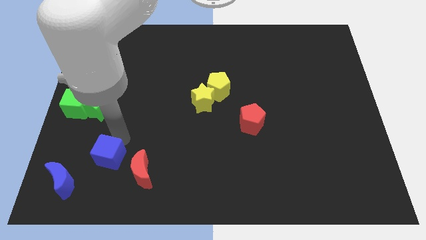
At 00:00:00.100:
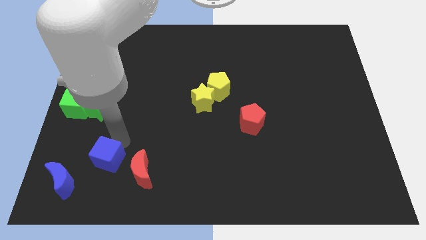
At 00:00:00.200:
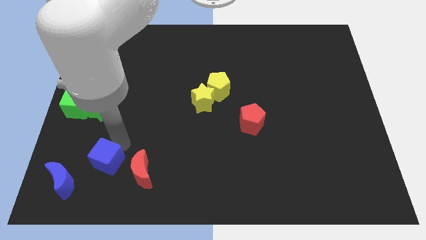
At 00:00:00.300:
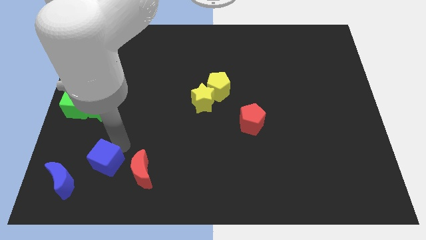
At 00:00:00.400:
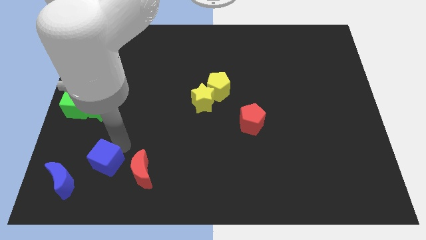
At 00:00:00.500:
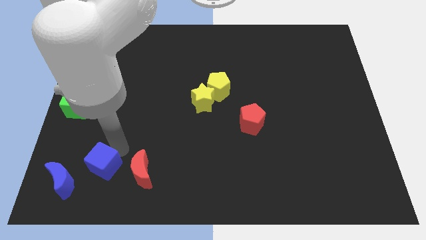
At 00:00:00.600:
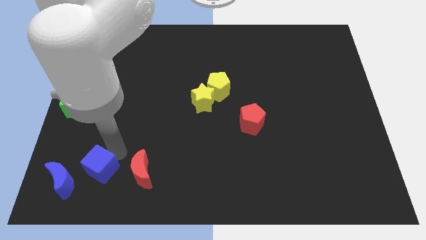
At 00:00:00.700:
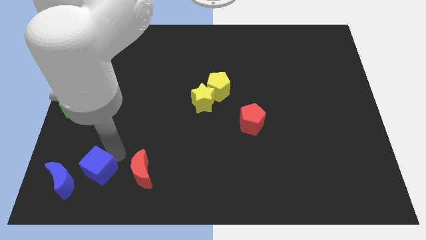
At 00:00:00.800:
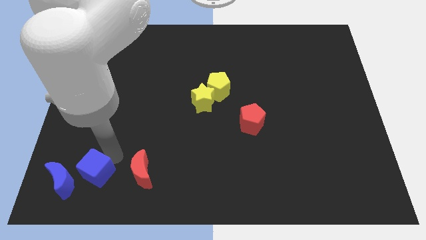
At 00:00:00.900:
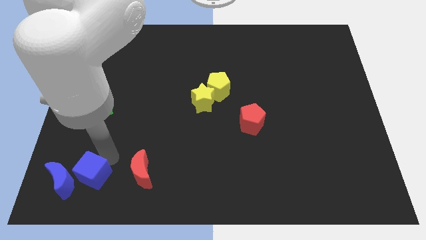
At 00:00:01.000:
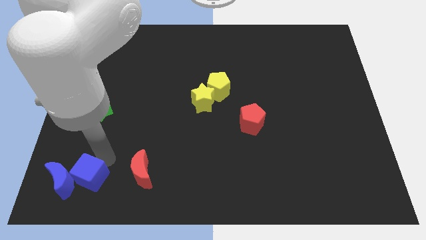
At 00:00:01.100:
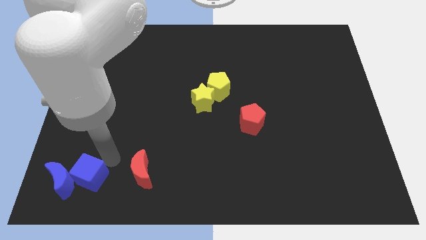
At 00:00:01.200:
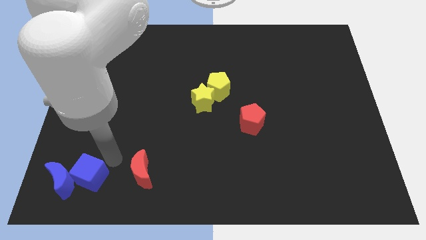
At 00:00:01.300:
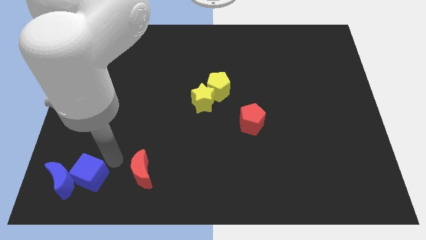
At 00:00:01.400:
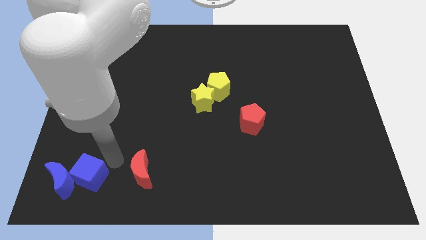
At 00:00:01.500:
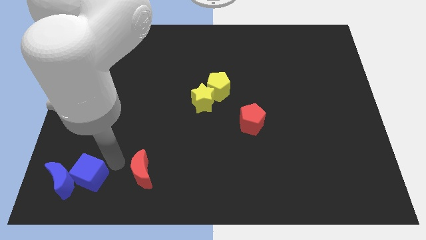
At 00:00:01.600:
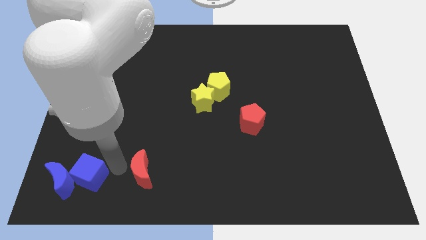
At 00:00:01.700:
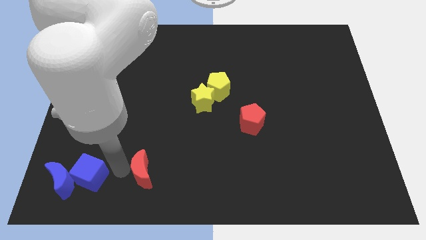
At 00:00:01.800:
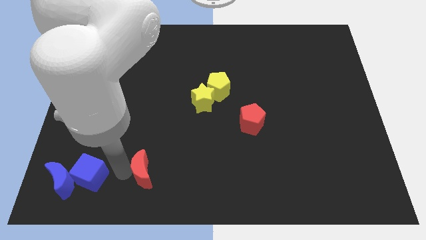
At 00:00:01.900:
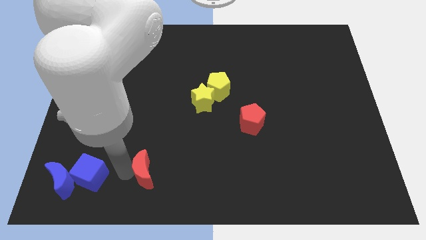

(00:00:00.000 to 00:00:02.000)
place the blue cube close to the blue crescent

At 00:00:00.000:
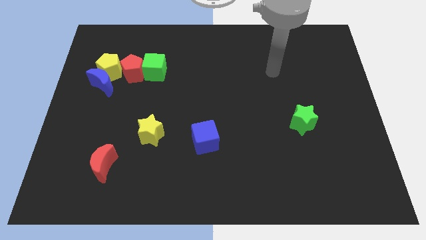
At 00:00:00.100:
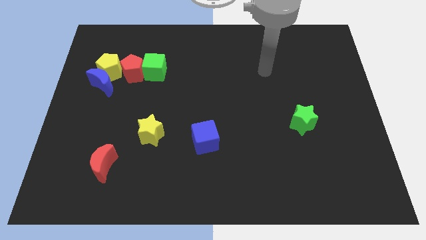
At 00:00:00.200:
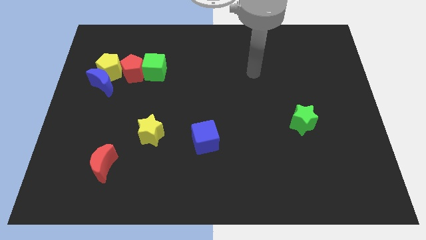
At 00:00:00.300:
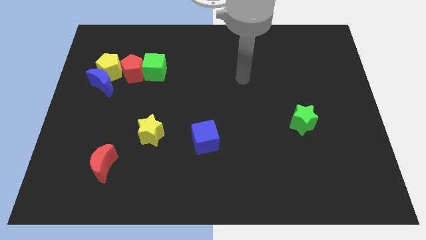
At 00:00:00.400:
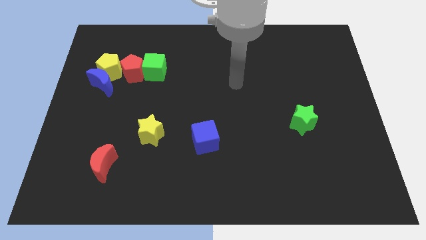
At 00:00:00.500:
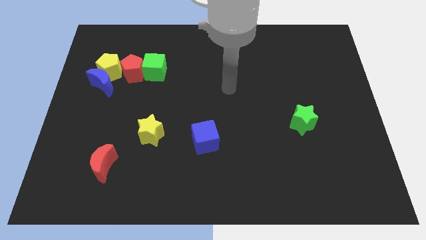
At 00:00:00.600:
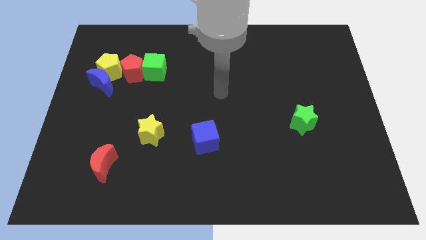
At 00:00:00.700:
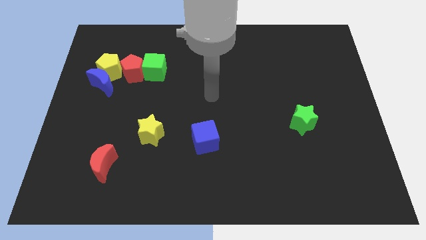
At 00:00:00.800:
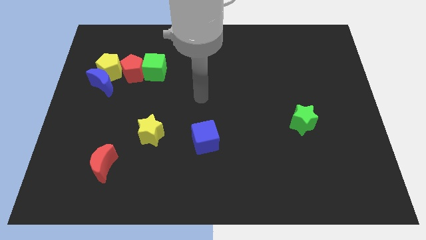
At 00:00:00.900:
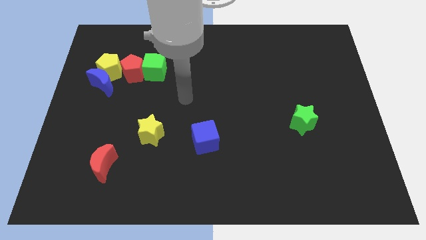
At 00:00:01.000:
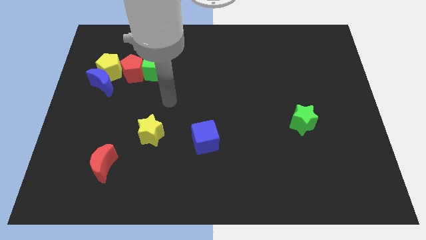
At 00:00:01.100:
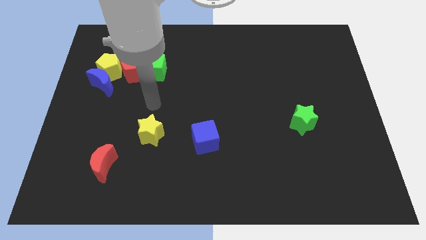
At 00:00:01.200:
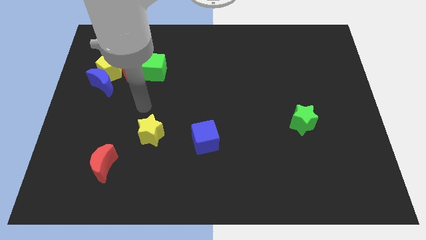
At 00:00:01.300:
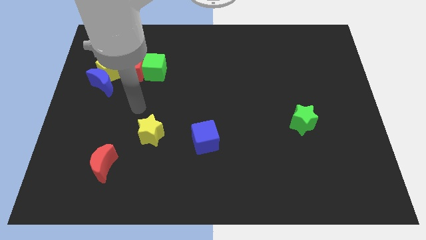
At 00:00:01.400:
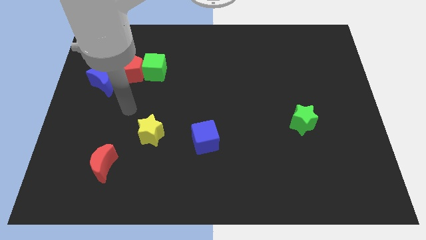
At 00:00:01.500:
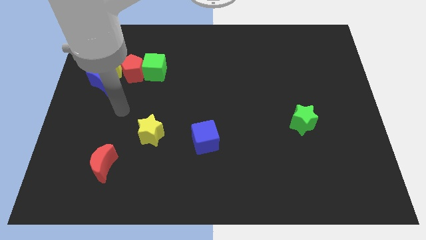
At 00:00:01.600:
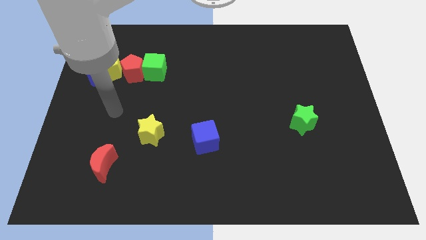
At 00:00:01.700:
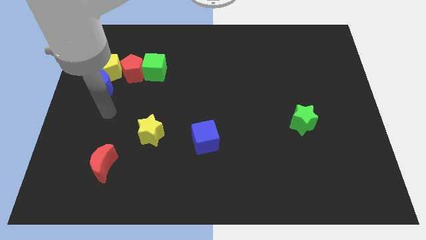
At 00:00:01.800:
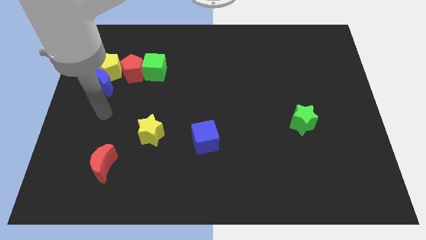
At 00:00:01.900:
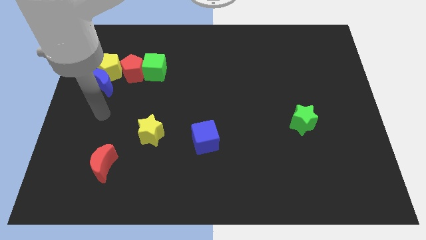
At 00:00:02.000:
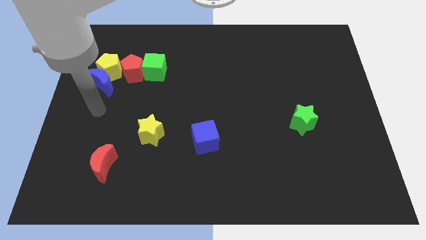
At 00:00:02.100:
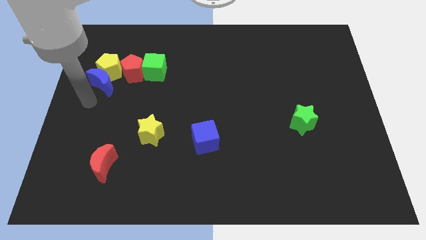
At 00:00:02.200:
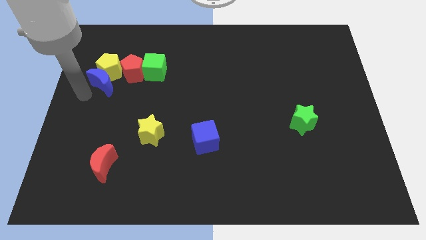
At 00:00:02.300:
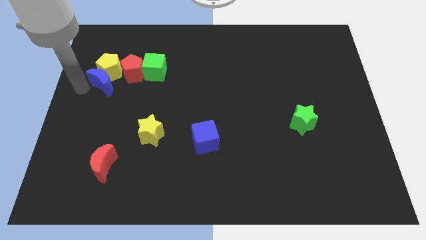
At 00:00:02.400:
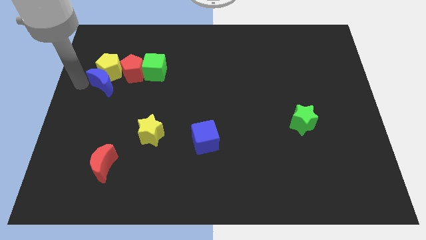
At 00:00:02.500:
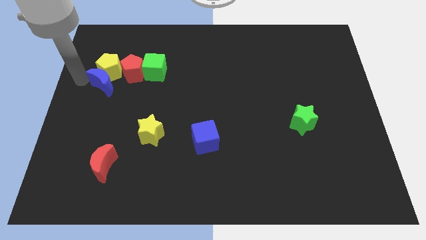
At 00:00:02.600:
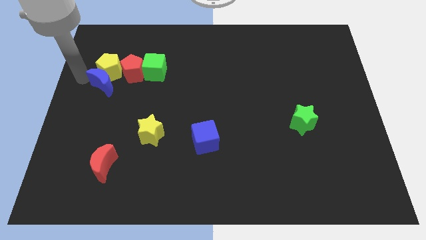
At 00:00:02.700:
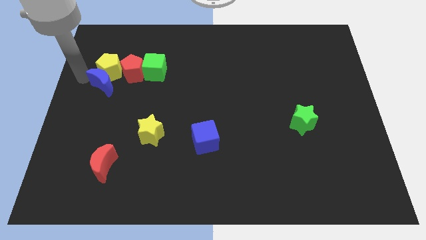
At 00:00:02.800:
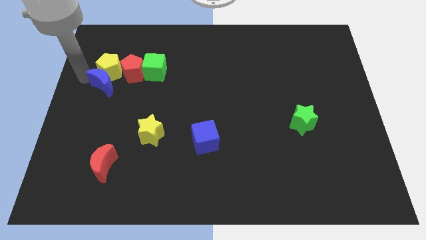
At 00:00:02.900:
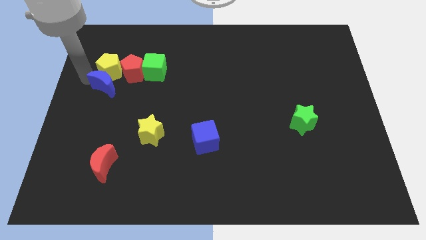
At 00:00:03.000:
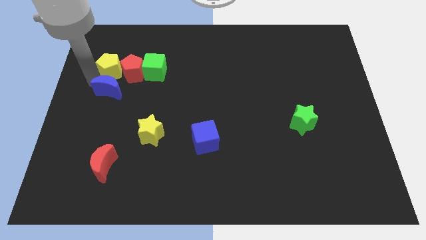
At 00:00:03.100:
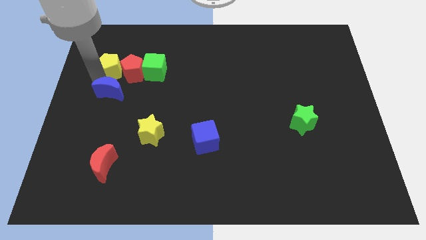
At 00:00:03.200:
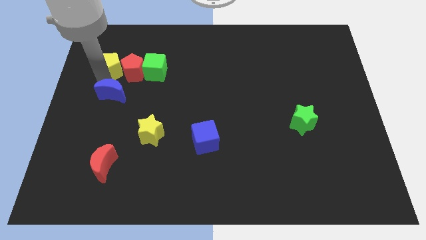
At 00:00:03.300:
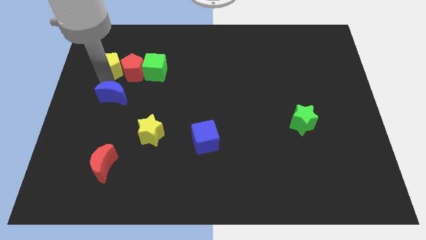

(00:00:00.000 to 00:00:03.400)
move your arm to the top of the blue crescent

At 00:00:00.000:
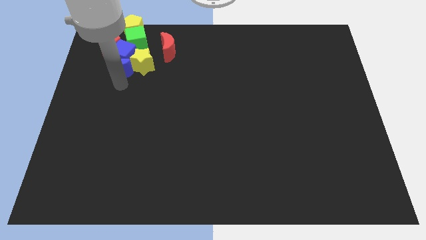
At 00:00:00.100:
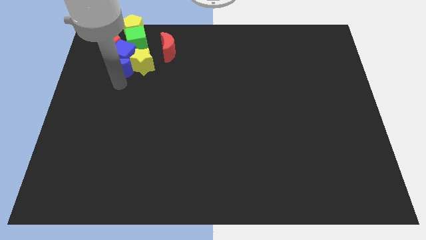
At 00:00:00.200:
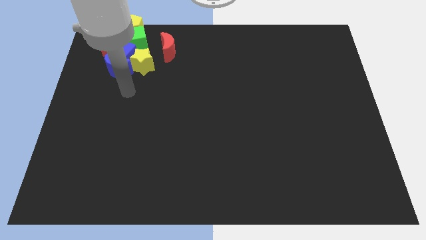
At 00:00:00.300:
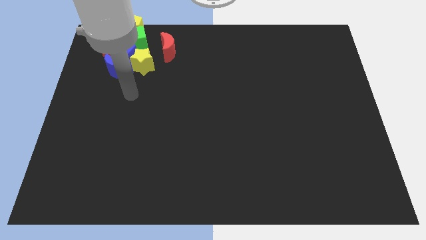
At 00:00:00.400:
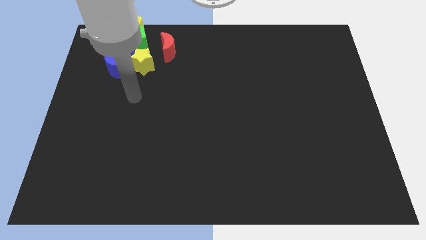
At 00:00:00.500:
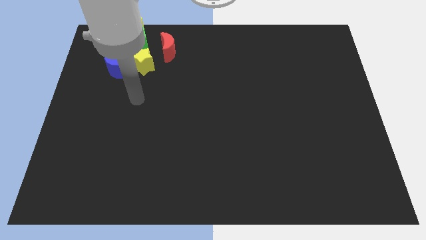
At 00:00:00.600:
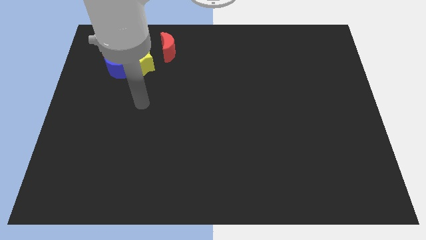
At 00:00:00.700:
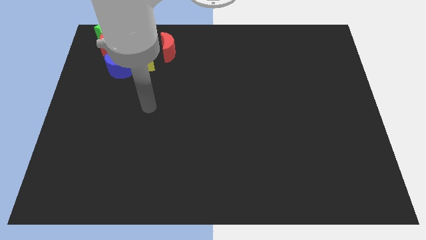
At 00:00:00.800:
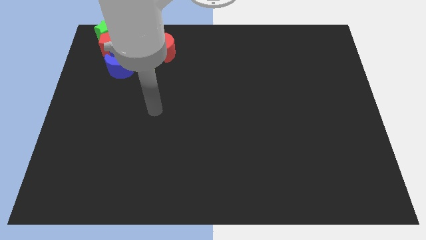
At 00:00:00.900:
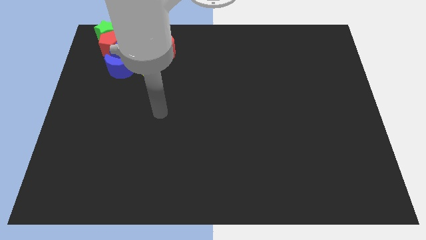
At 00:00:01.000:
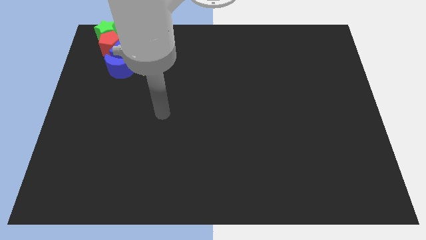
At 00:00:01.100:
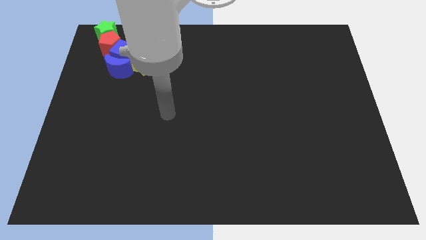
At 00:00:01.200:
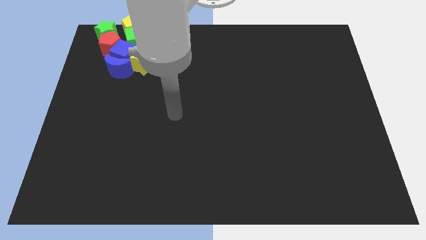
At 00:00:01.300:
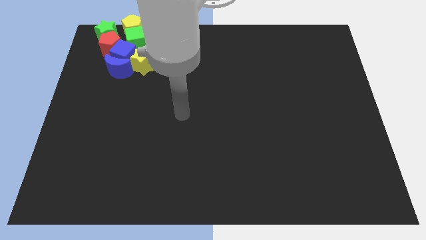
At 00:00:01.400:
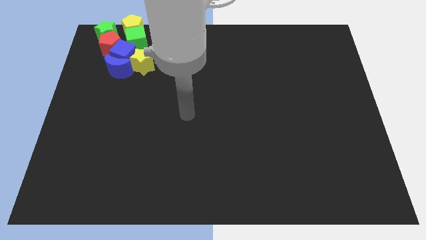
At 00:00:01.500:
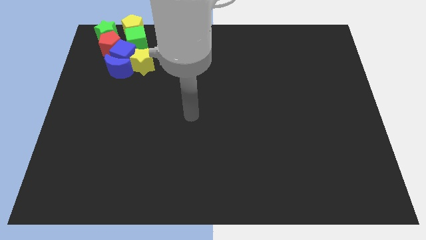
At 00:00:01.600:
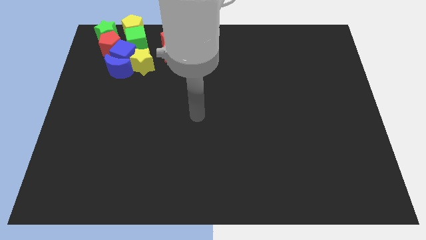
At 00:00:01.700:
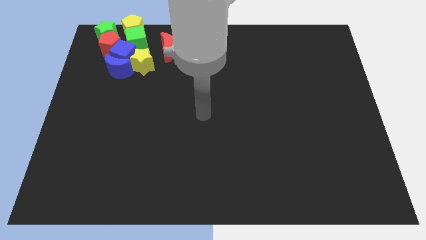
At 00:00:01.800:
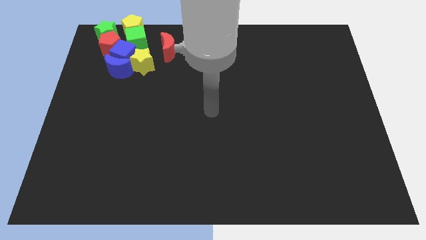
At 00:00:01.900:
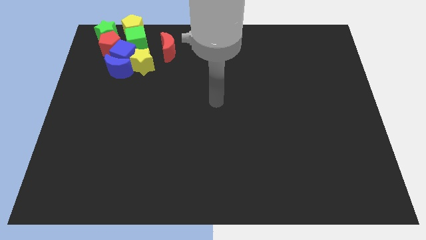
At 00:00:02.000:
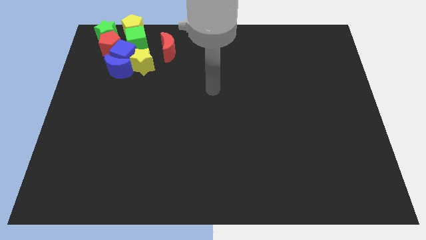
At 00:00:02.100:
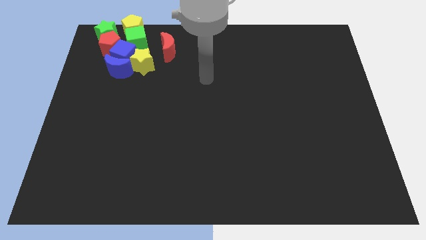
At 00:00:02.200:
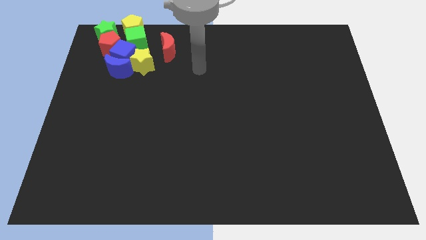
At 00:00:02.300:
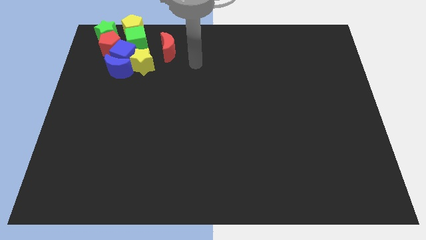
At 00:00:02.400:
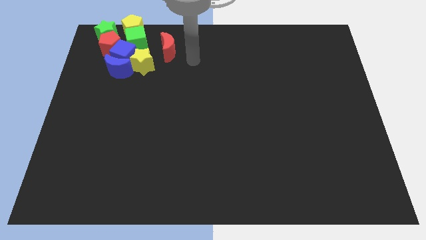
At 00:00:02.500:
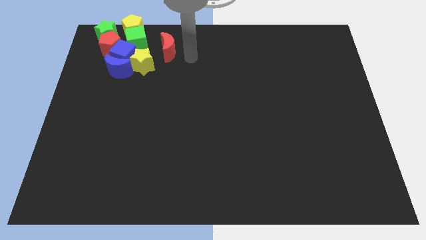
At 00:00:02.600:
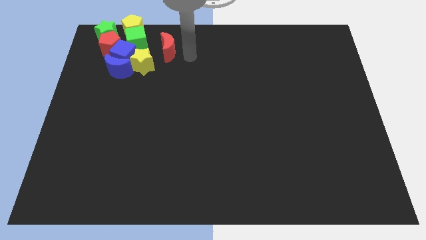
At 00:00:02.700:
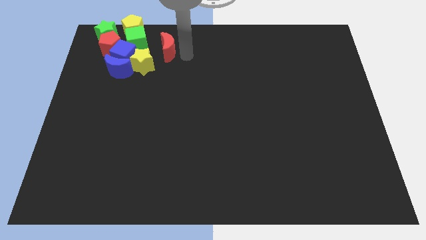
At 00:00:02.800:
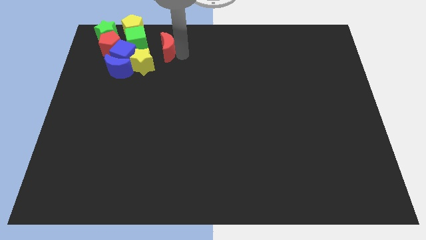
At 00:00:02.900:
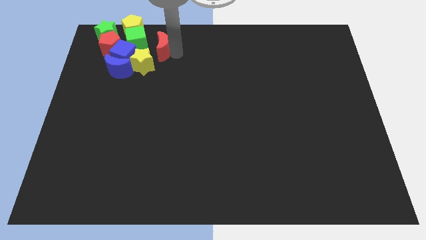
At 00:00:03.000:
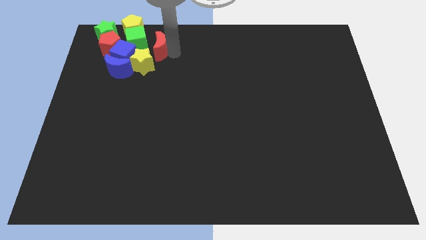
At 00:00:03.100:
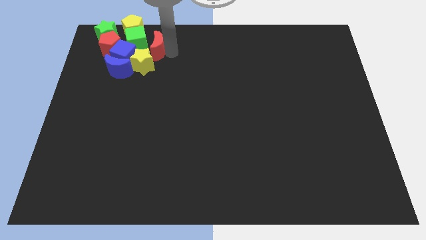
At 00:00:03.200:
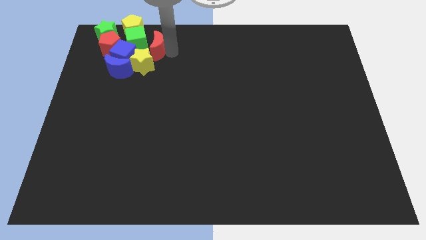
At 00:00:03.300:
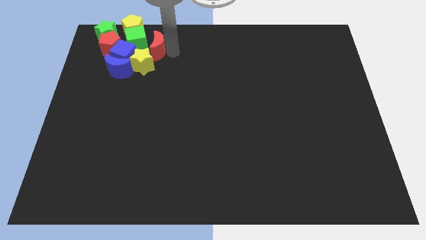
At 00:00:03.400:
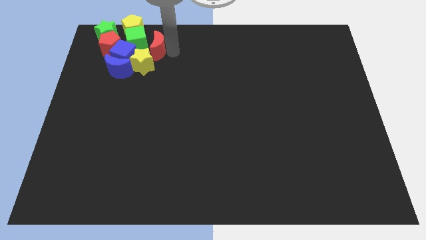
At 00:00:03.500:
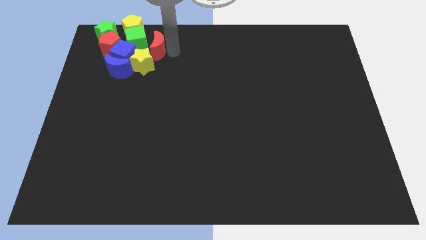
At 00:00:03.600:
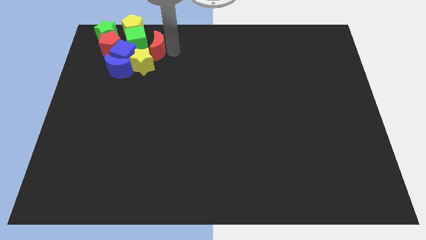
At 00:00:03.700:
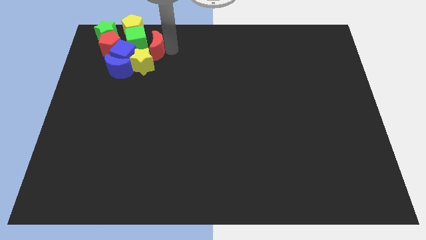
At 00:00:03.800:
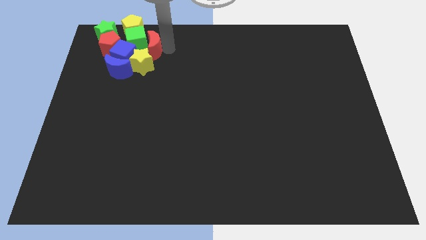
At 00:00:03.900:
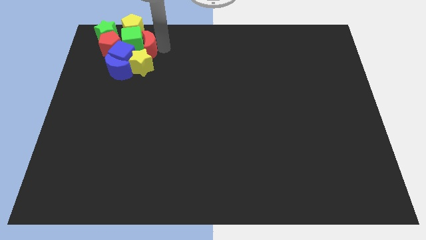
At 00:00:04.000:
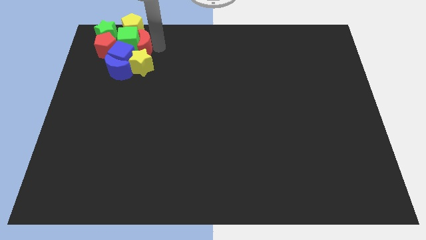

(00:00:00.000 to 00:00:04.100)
drag the red moon into the right side of the green cube
